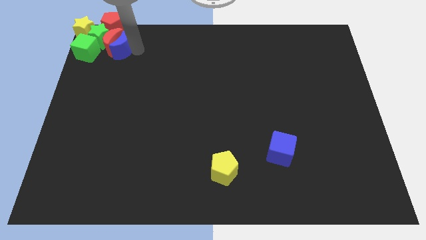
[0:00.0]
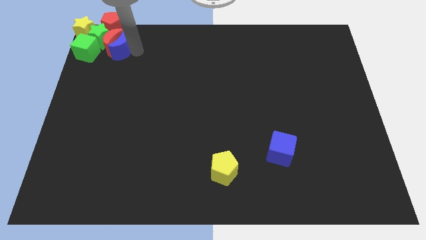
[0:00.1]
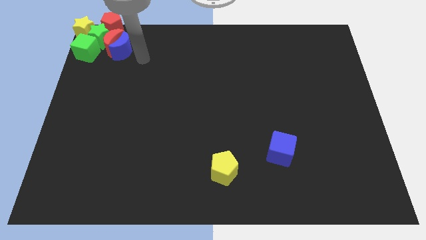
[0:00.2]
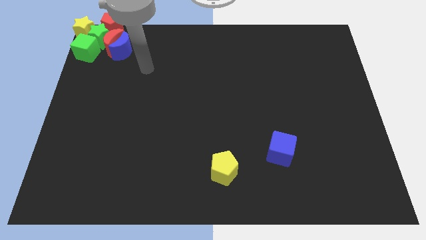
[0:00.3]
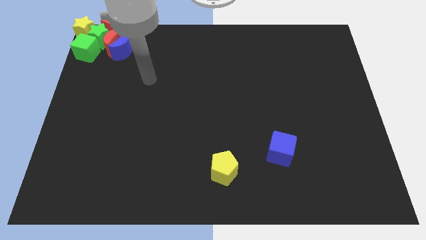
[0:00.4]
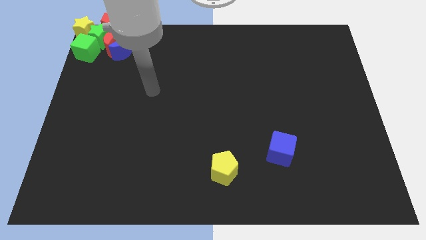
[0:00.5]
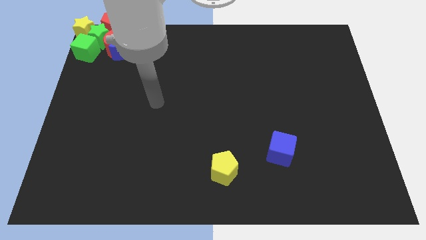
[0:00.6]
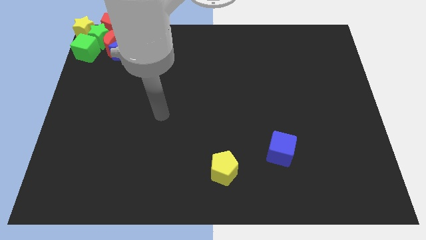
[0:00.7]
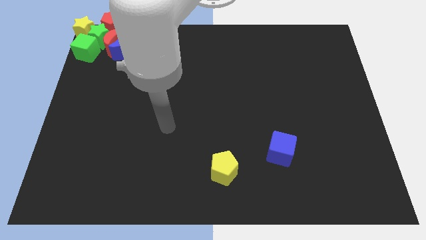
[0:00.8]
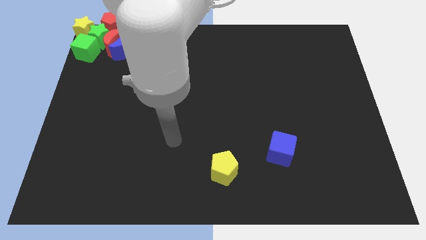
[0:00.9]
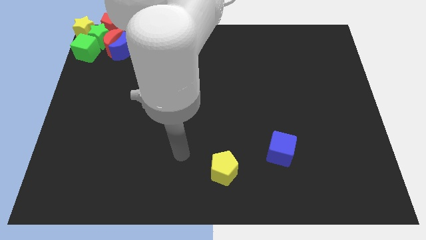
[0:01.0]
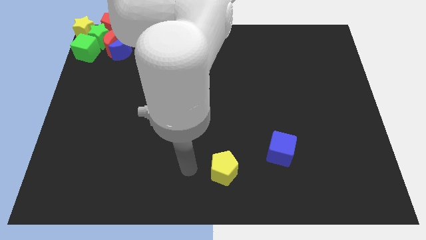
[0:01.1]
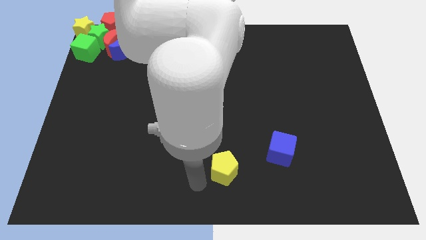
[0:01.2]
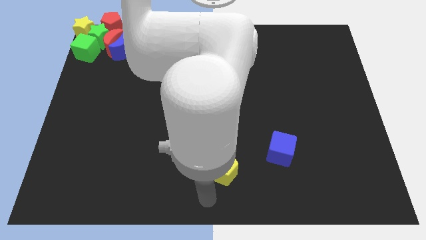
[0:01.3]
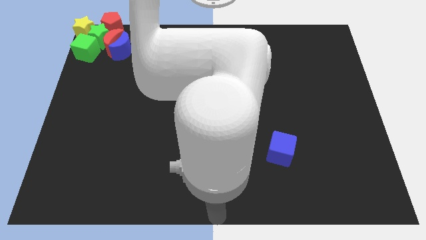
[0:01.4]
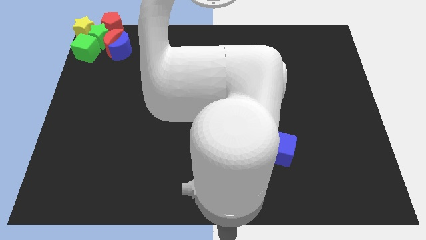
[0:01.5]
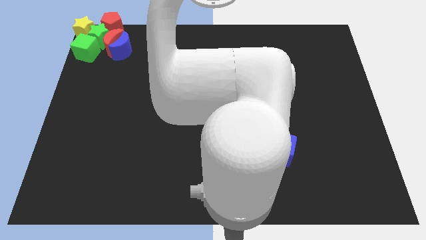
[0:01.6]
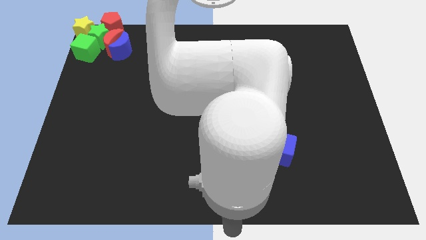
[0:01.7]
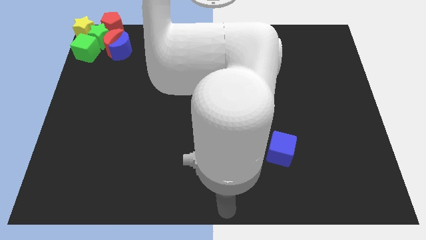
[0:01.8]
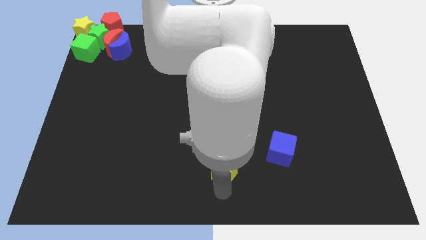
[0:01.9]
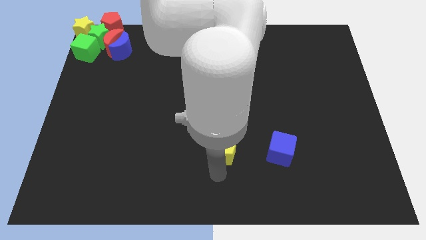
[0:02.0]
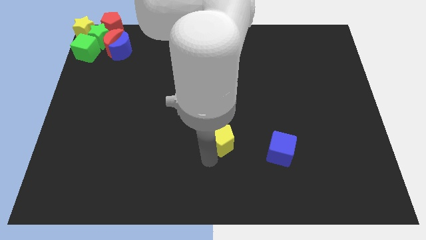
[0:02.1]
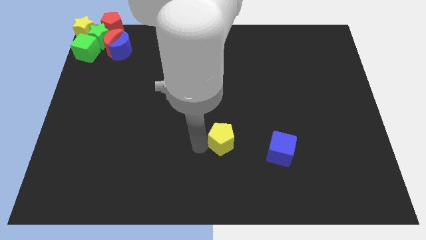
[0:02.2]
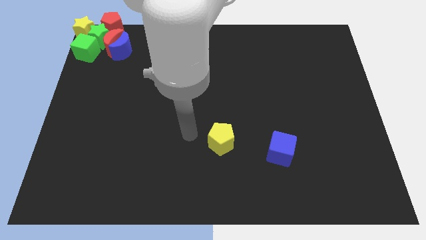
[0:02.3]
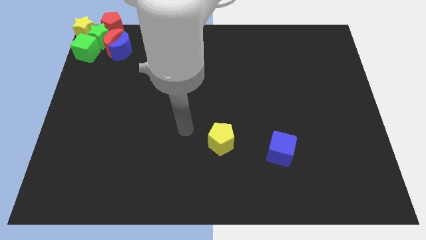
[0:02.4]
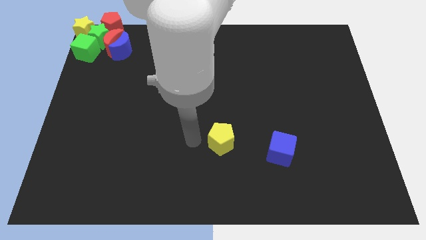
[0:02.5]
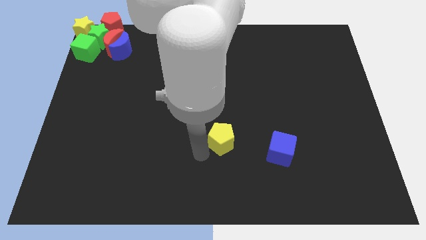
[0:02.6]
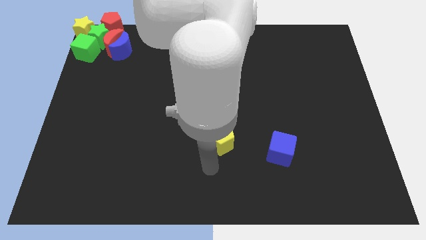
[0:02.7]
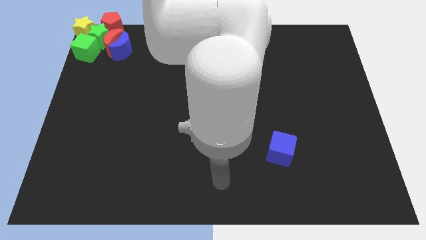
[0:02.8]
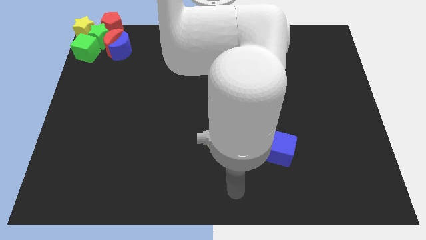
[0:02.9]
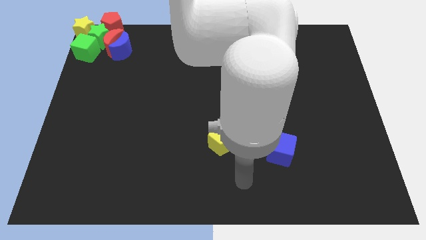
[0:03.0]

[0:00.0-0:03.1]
slightly move the yellow pentagon towards the top of the board

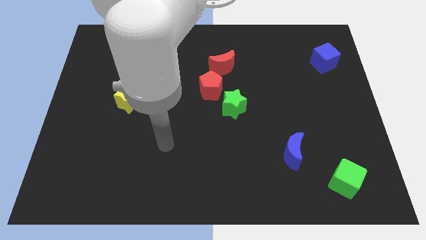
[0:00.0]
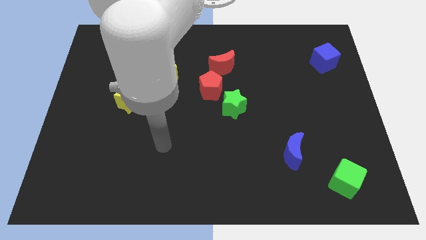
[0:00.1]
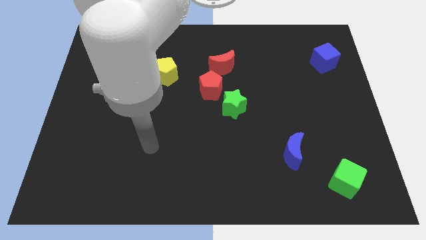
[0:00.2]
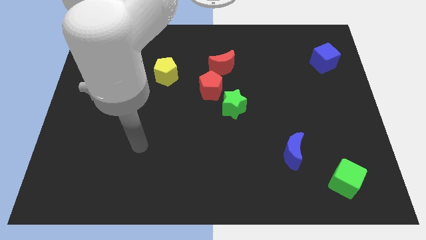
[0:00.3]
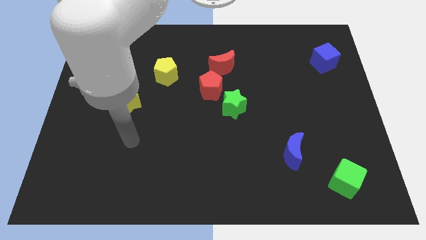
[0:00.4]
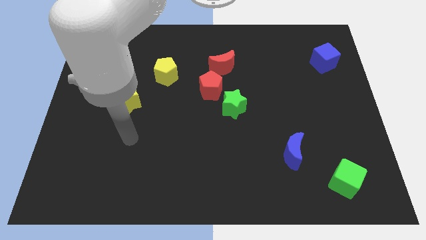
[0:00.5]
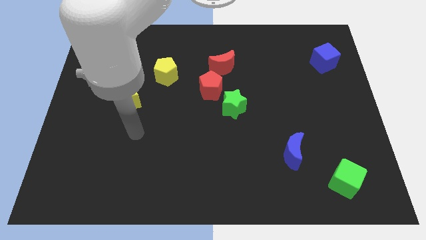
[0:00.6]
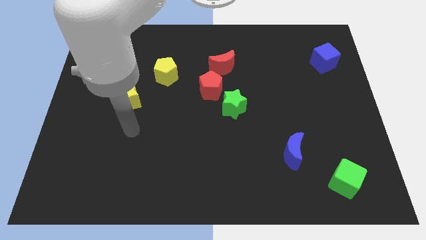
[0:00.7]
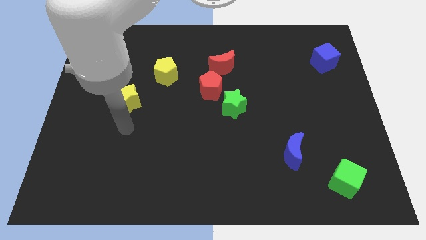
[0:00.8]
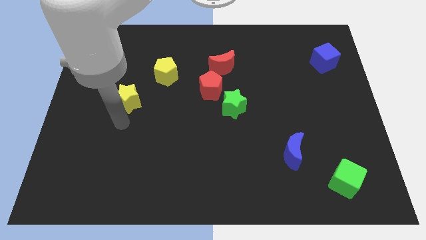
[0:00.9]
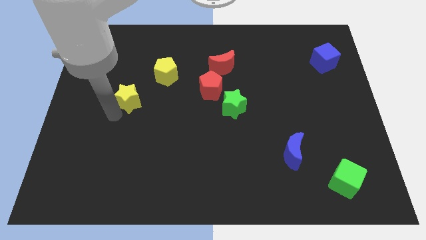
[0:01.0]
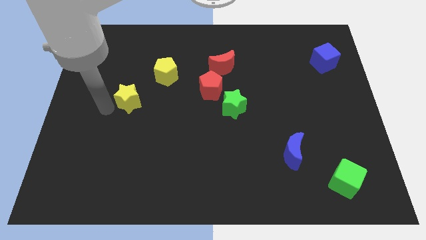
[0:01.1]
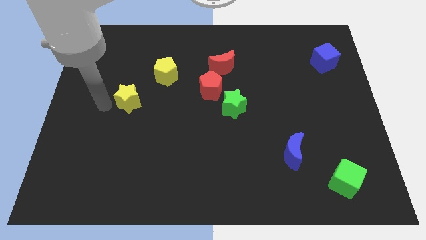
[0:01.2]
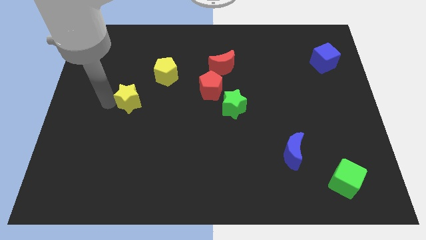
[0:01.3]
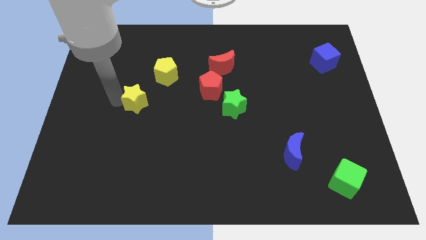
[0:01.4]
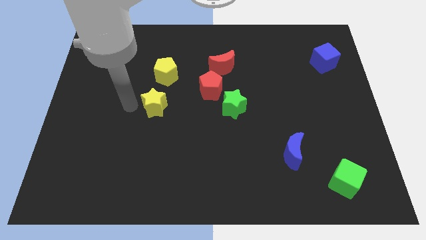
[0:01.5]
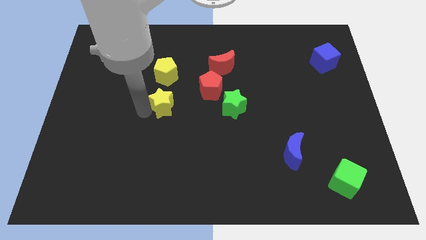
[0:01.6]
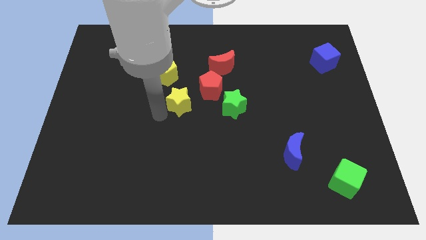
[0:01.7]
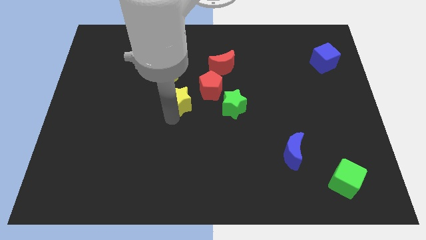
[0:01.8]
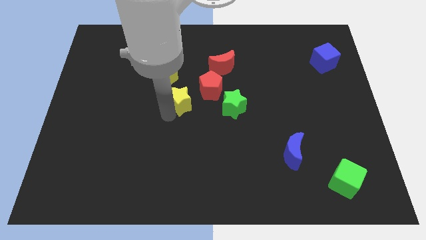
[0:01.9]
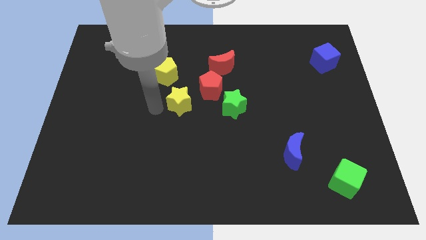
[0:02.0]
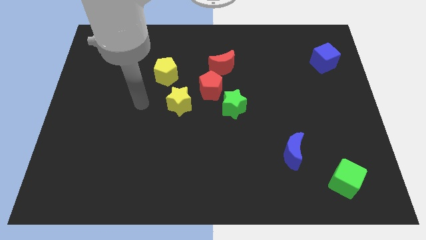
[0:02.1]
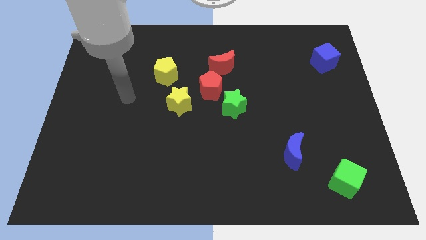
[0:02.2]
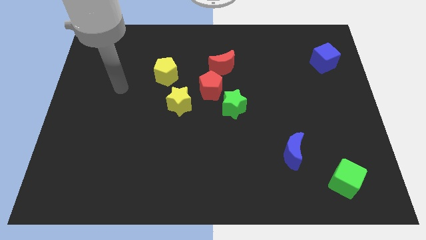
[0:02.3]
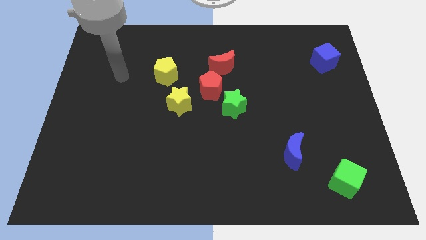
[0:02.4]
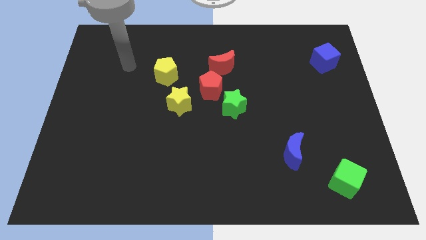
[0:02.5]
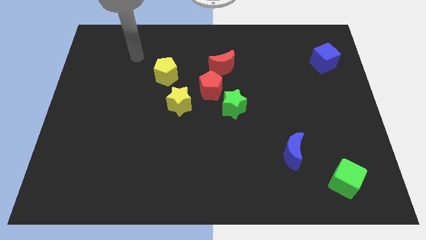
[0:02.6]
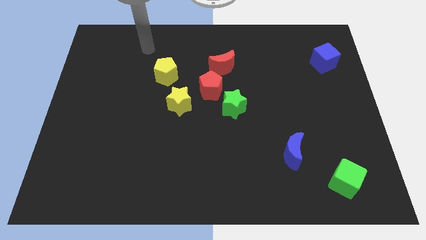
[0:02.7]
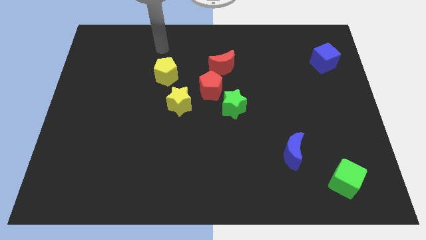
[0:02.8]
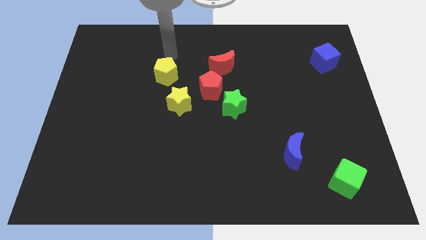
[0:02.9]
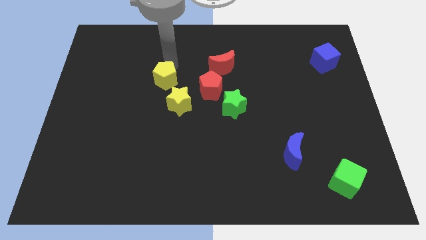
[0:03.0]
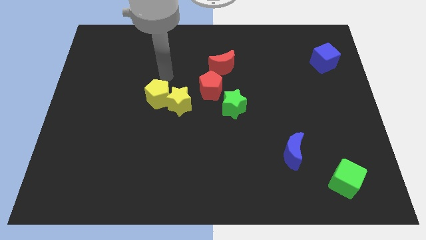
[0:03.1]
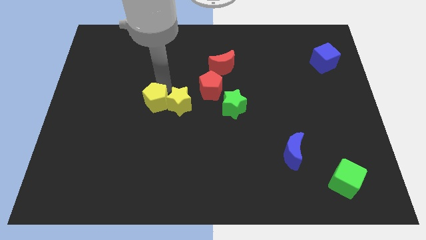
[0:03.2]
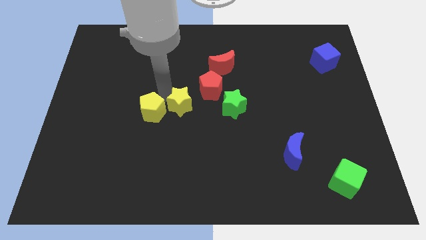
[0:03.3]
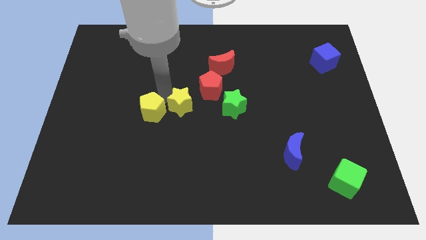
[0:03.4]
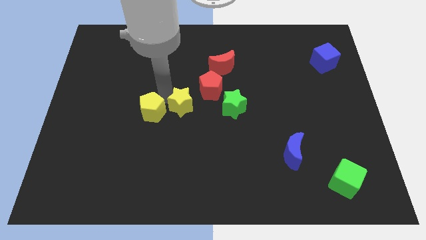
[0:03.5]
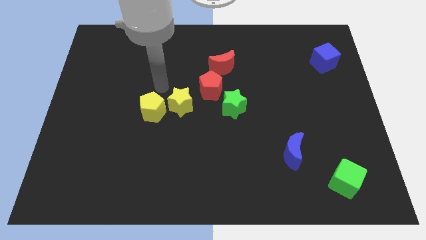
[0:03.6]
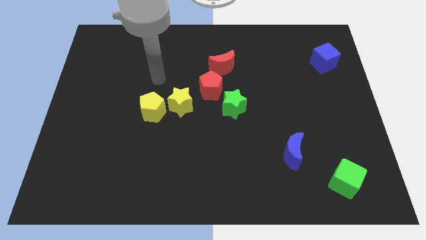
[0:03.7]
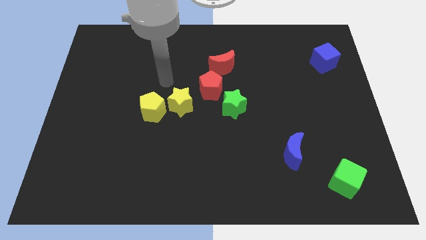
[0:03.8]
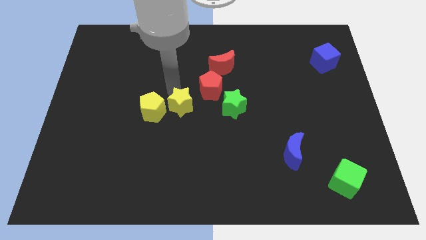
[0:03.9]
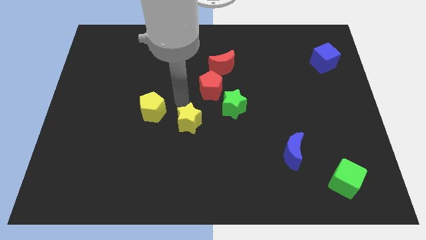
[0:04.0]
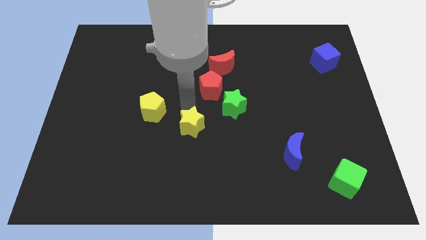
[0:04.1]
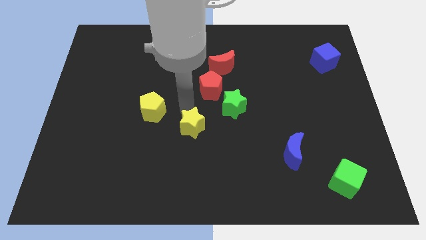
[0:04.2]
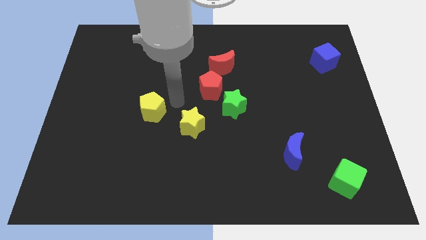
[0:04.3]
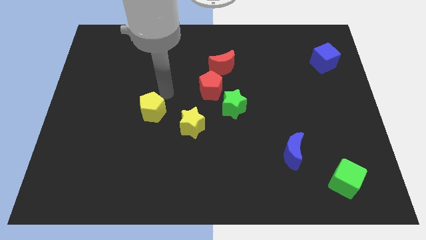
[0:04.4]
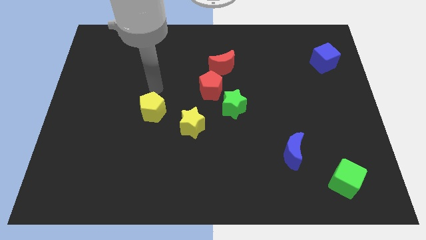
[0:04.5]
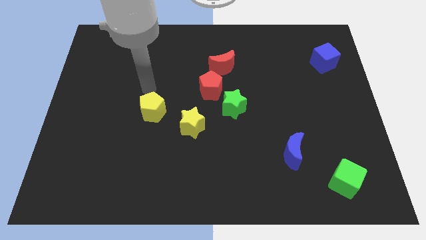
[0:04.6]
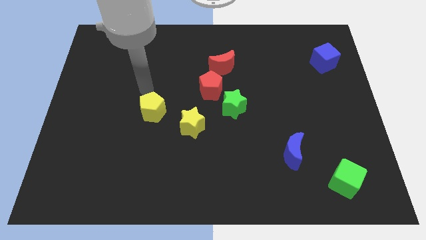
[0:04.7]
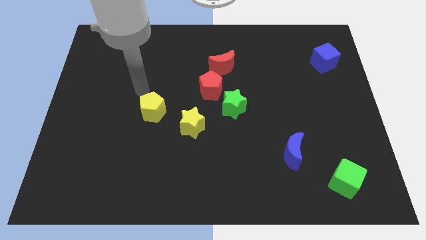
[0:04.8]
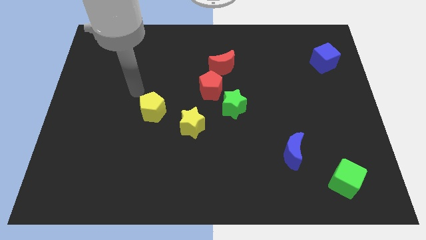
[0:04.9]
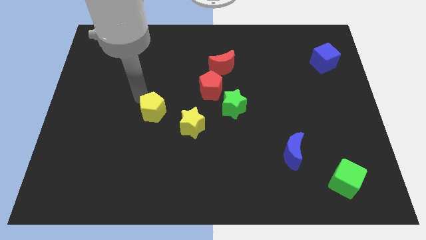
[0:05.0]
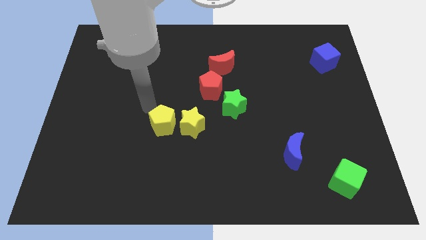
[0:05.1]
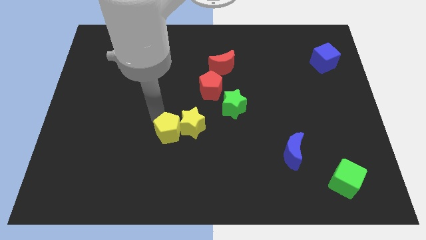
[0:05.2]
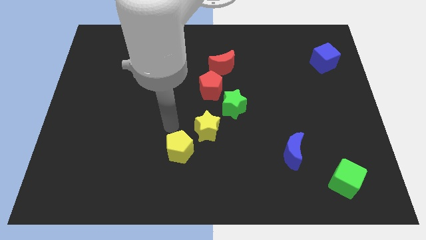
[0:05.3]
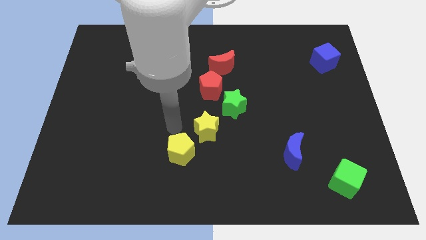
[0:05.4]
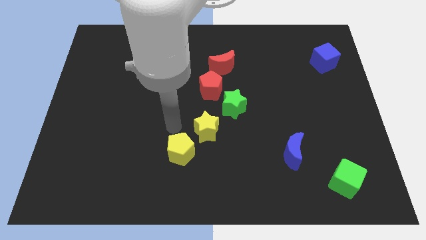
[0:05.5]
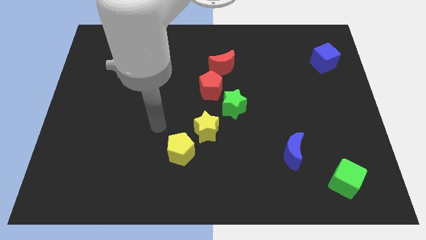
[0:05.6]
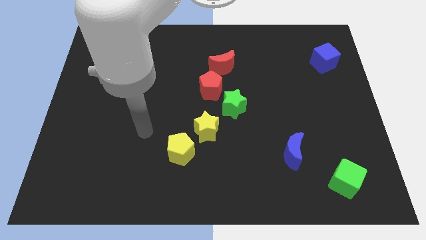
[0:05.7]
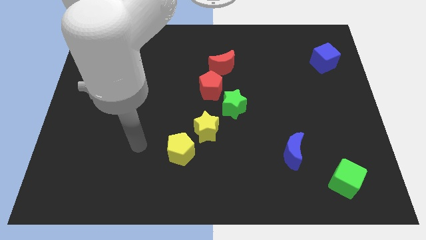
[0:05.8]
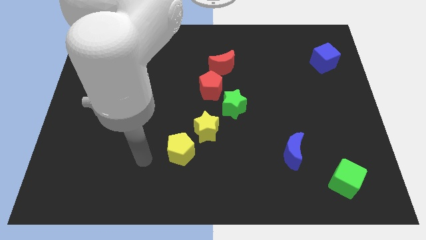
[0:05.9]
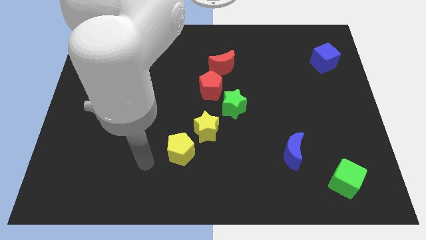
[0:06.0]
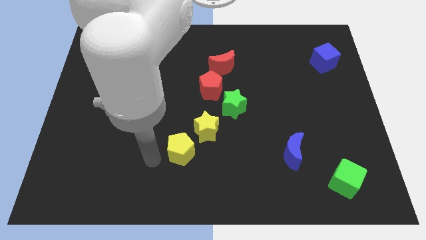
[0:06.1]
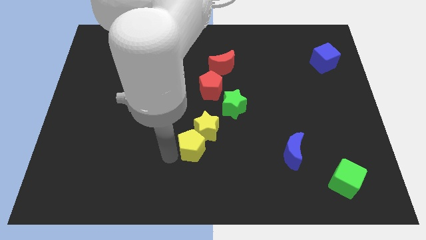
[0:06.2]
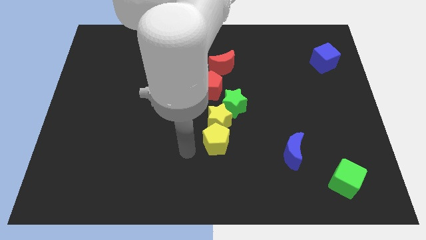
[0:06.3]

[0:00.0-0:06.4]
push the yellow blocks to the center of the board
